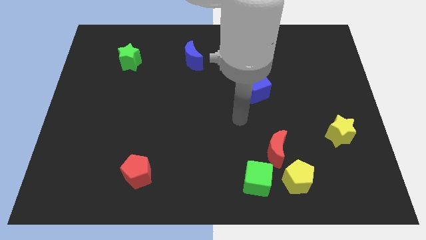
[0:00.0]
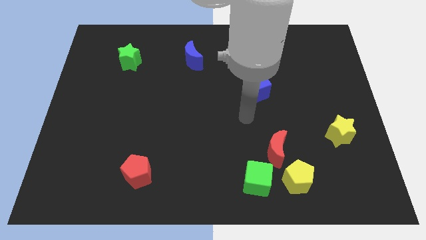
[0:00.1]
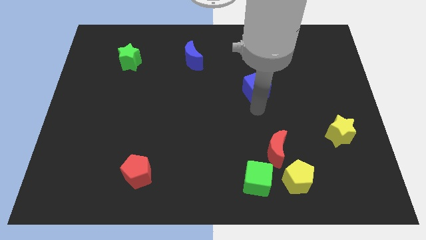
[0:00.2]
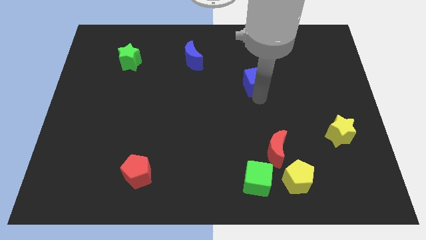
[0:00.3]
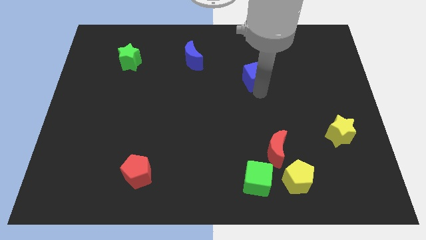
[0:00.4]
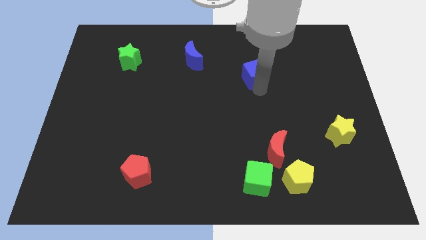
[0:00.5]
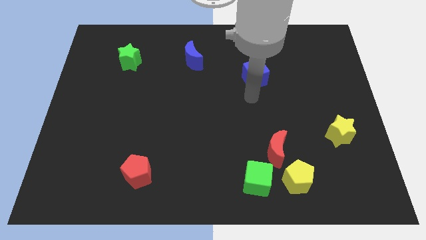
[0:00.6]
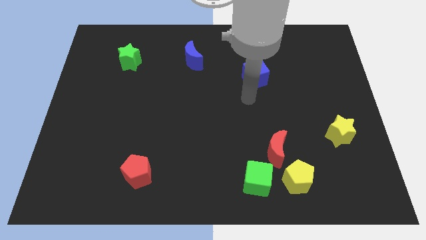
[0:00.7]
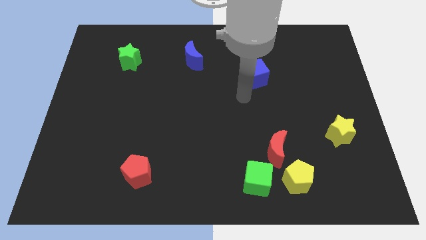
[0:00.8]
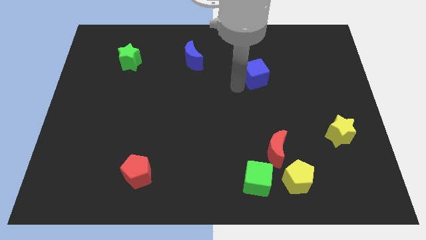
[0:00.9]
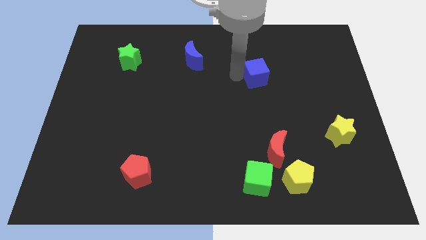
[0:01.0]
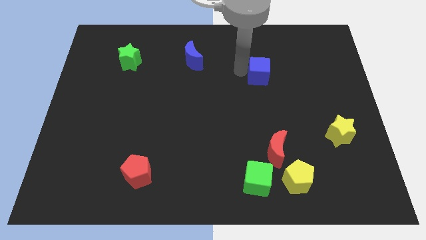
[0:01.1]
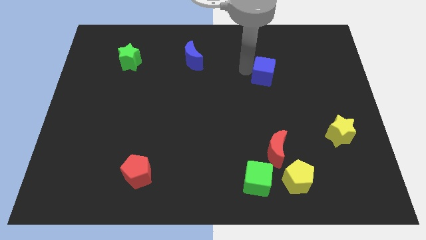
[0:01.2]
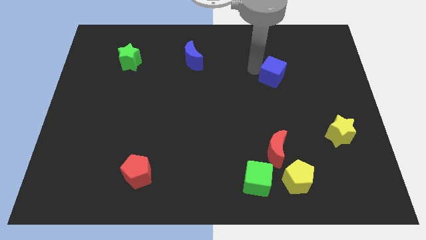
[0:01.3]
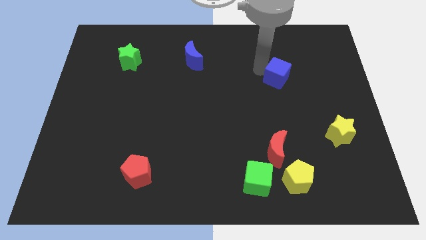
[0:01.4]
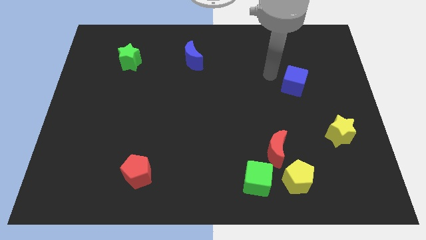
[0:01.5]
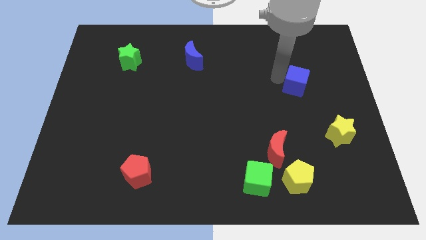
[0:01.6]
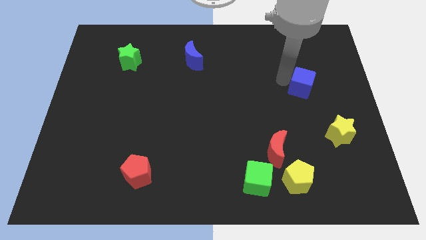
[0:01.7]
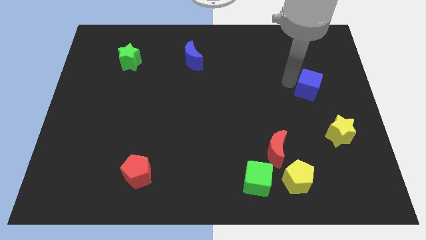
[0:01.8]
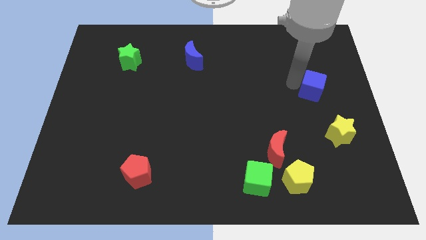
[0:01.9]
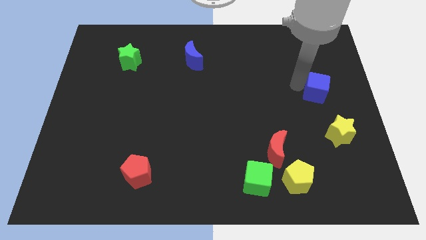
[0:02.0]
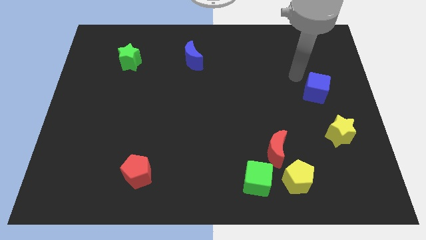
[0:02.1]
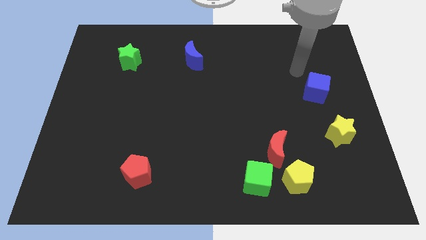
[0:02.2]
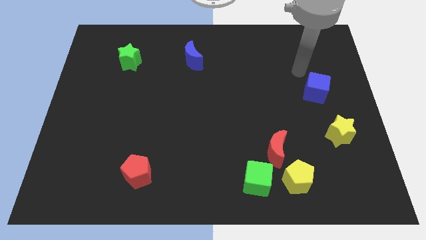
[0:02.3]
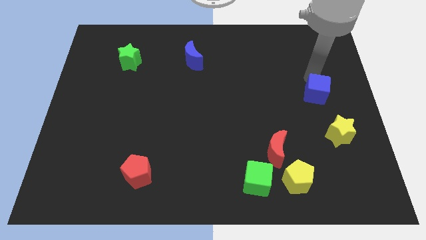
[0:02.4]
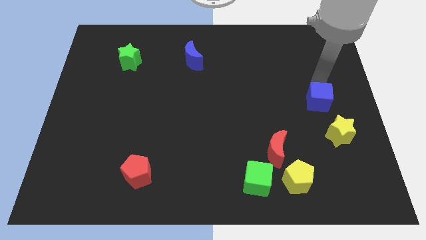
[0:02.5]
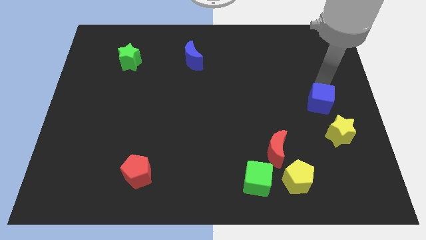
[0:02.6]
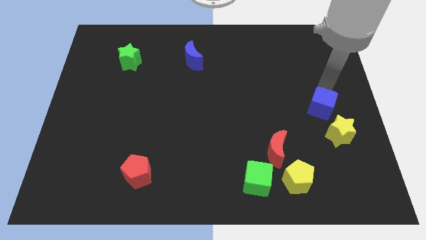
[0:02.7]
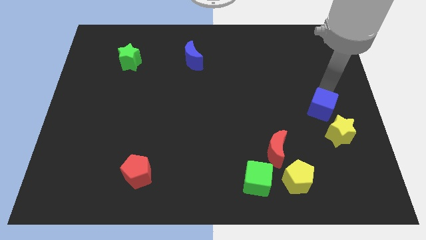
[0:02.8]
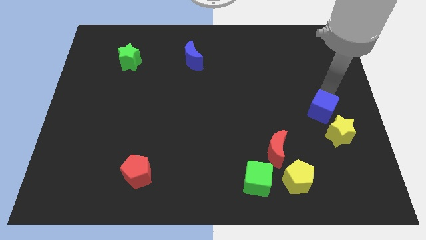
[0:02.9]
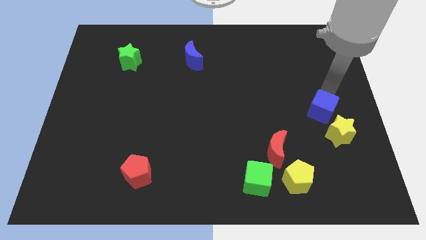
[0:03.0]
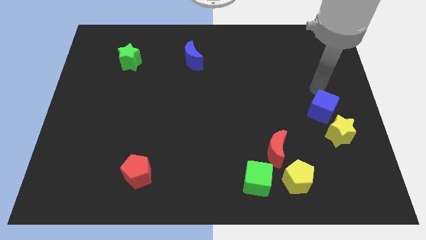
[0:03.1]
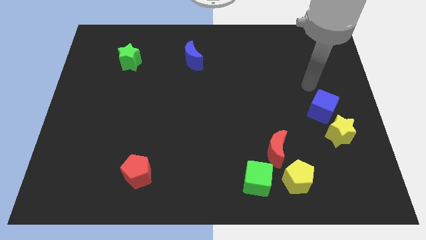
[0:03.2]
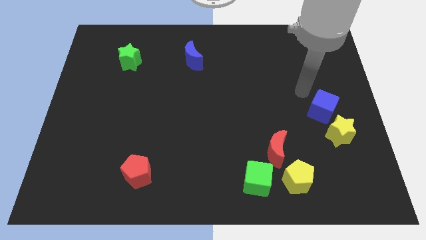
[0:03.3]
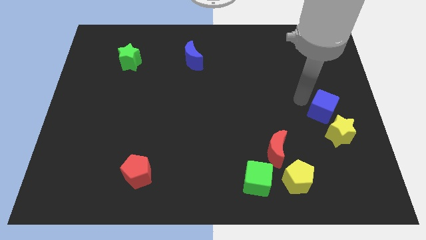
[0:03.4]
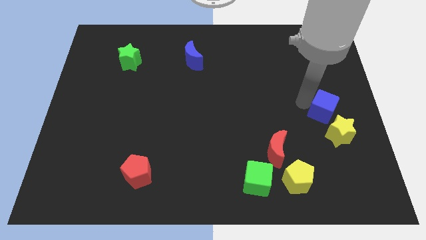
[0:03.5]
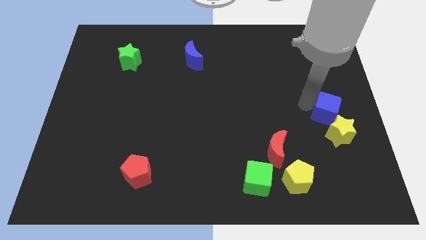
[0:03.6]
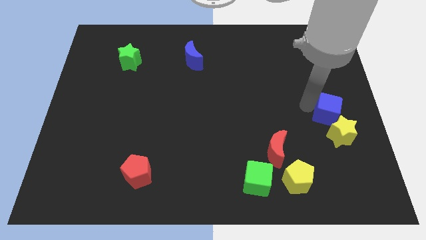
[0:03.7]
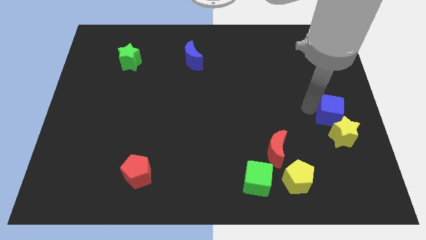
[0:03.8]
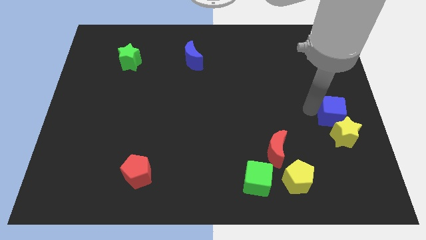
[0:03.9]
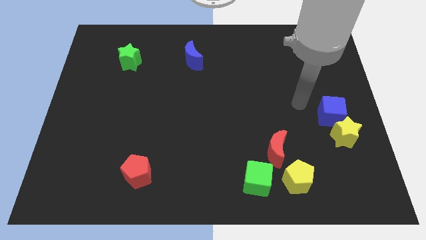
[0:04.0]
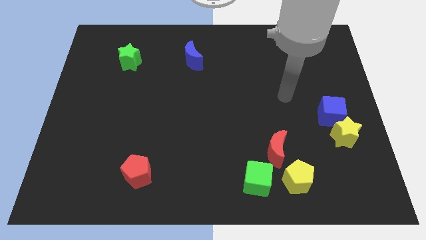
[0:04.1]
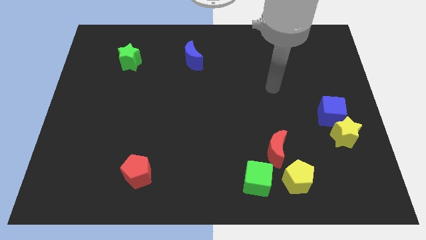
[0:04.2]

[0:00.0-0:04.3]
push the blue cube into the yellow star

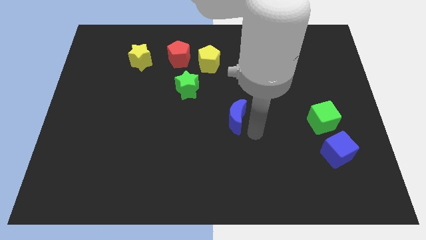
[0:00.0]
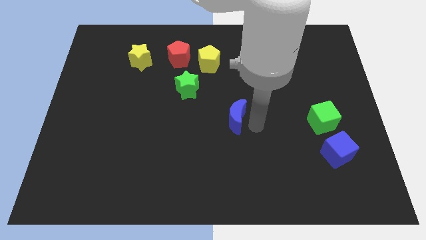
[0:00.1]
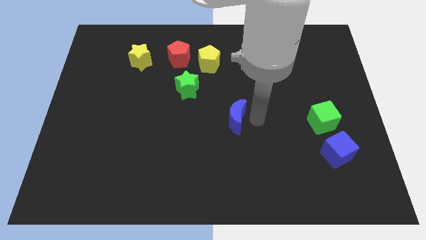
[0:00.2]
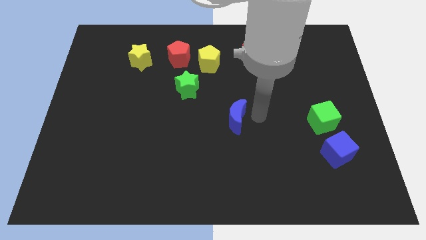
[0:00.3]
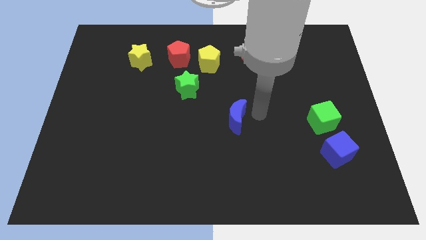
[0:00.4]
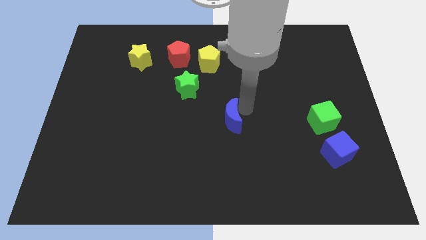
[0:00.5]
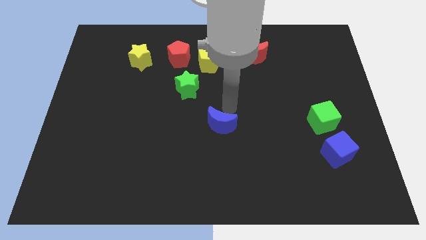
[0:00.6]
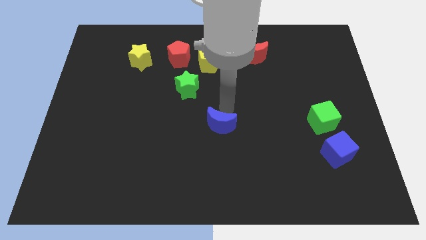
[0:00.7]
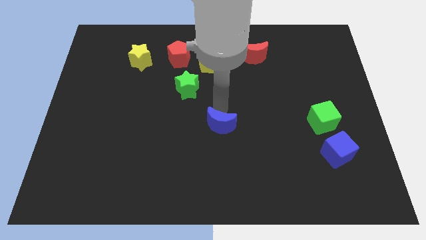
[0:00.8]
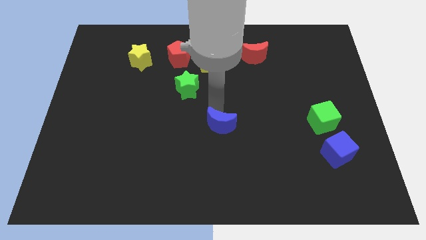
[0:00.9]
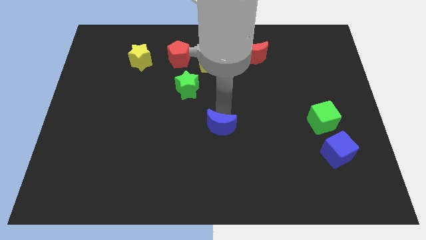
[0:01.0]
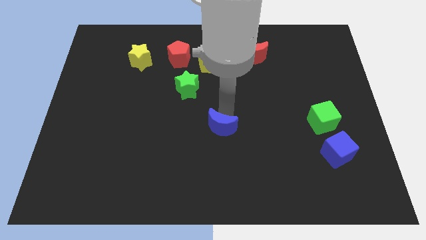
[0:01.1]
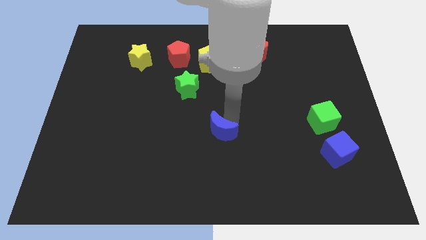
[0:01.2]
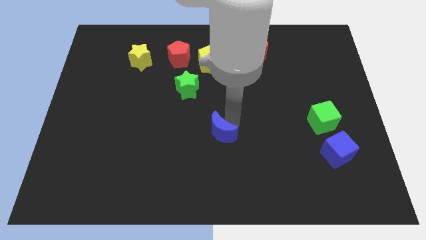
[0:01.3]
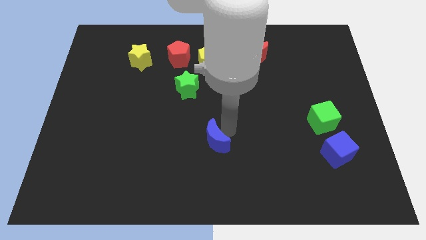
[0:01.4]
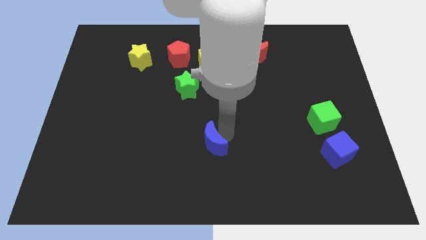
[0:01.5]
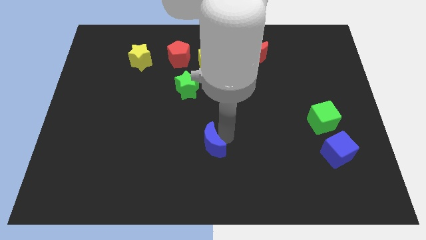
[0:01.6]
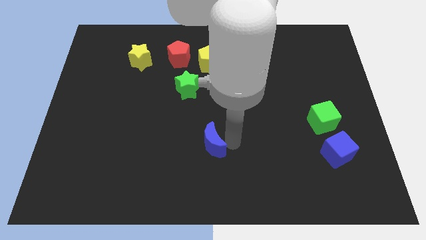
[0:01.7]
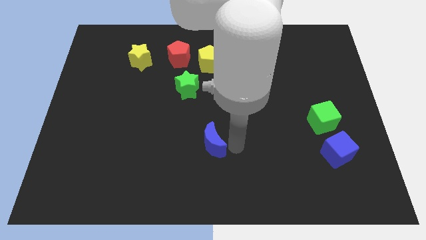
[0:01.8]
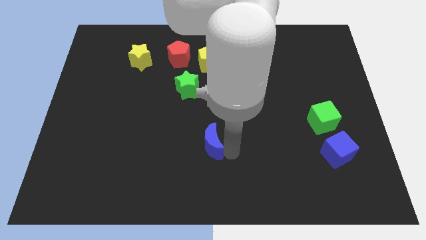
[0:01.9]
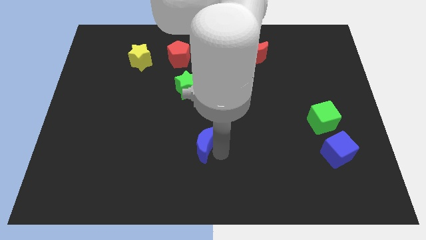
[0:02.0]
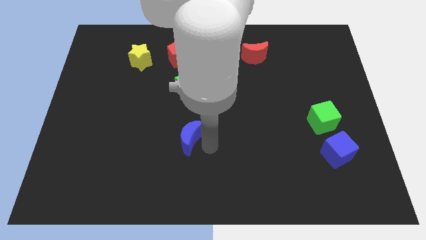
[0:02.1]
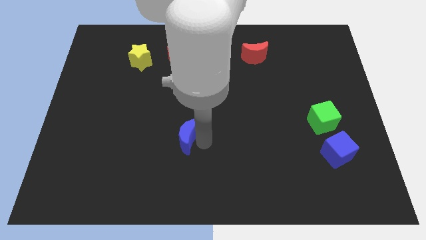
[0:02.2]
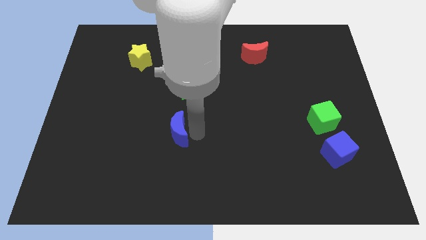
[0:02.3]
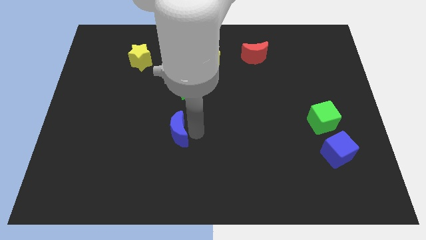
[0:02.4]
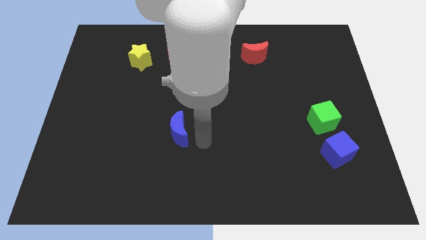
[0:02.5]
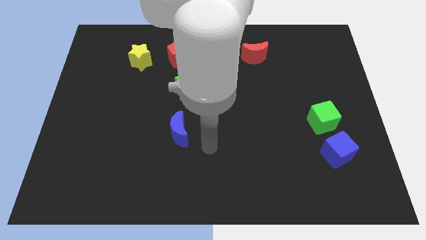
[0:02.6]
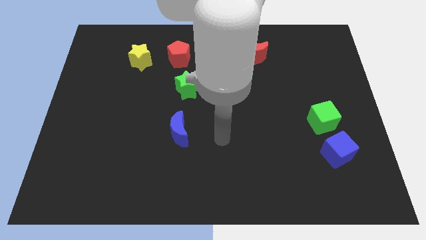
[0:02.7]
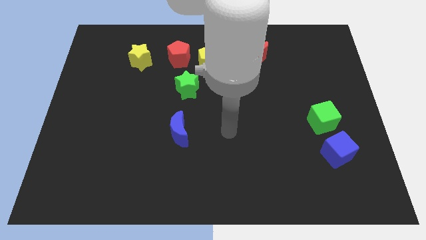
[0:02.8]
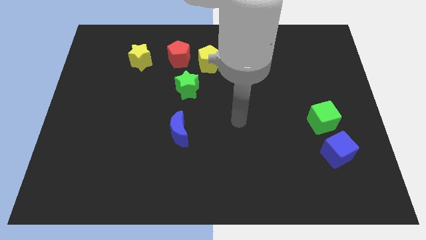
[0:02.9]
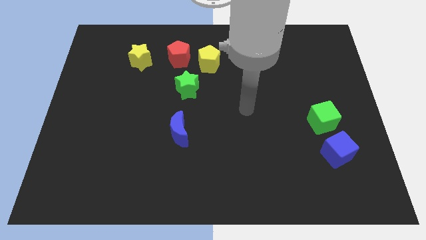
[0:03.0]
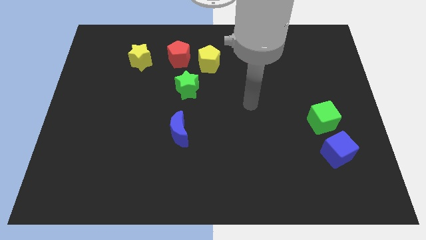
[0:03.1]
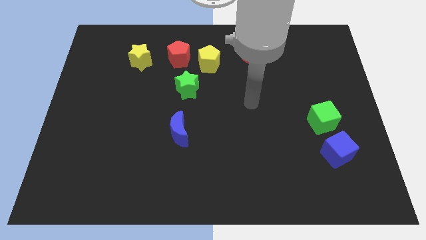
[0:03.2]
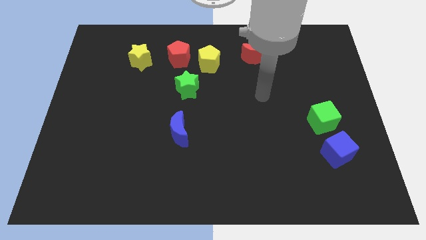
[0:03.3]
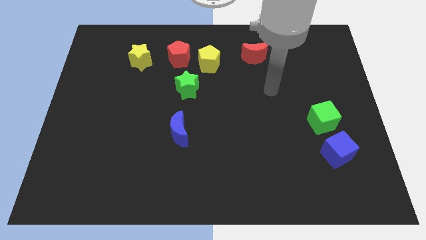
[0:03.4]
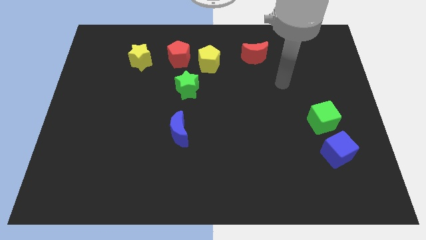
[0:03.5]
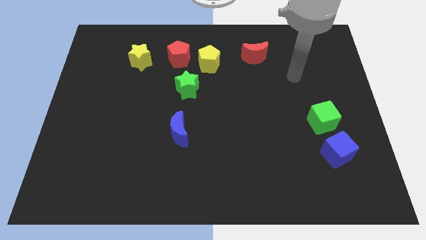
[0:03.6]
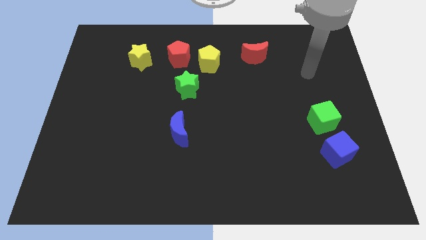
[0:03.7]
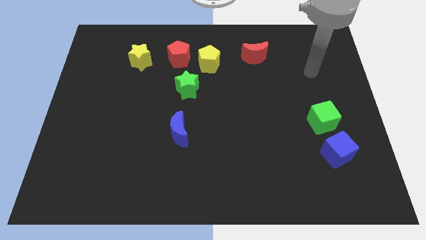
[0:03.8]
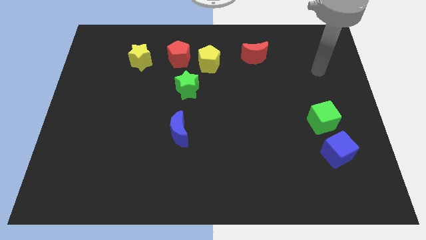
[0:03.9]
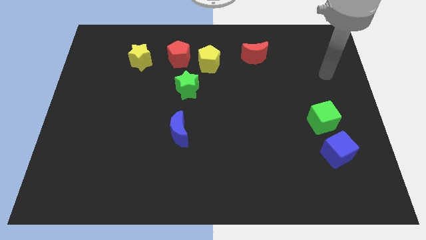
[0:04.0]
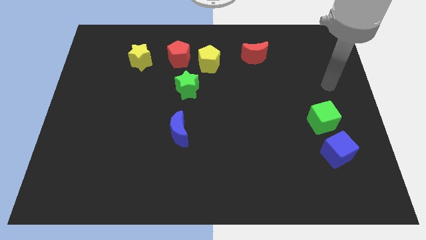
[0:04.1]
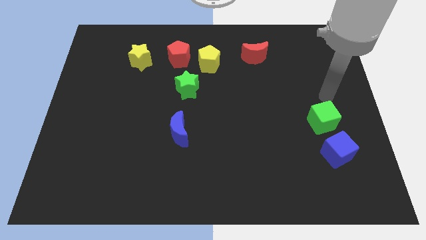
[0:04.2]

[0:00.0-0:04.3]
place the blue crescent below the green star to form a vertical line

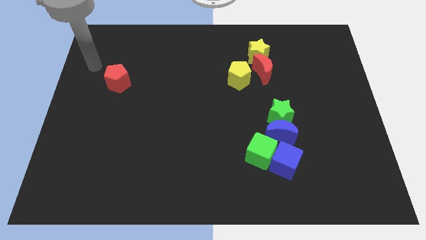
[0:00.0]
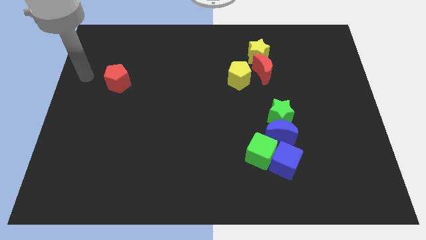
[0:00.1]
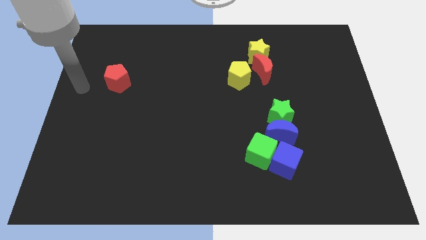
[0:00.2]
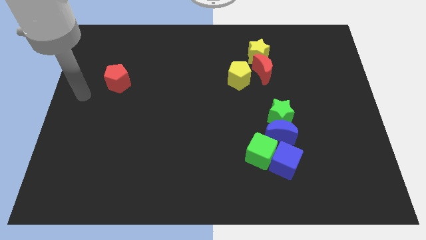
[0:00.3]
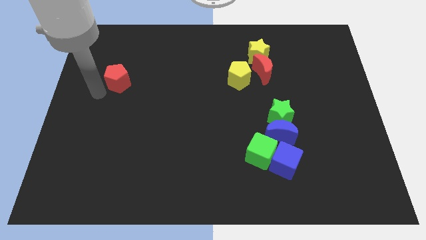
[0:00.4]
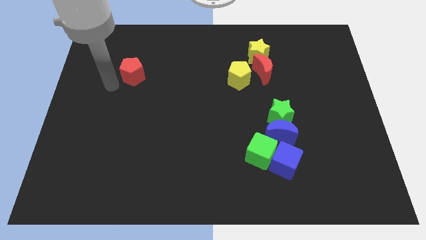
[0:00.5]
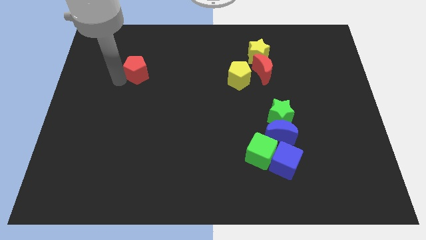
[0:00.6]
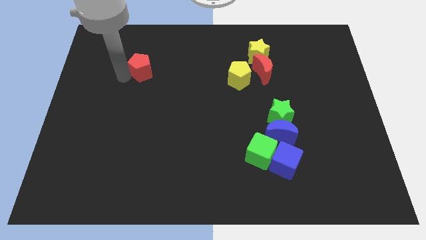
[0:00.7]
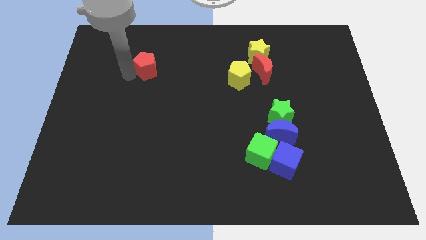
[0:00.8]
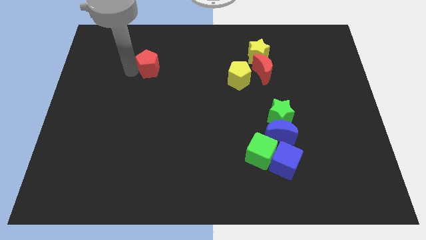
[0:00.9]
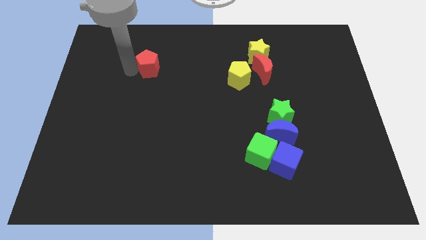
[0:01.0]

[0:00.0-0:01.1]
move red pentagon parallel to yellow pentagon
